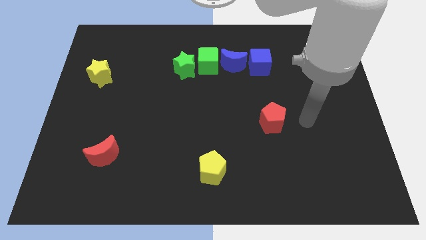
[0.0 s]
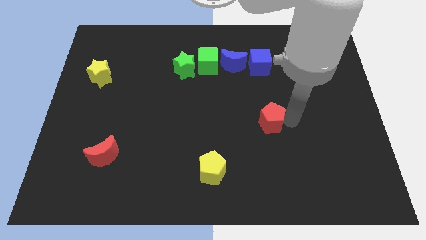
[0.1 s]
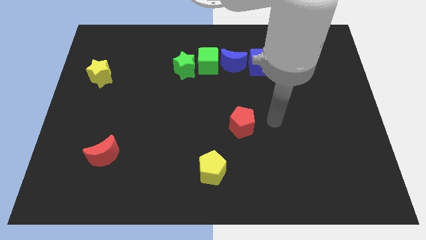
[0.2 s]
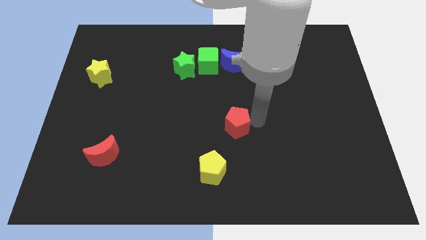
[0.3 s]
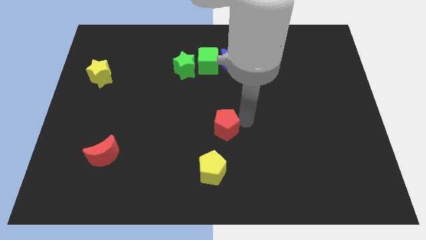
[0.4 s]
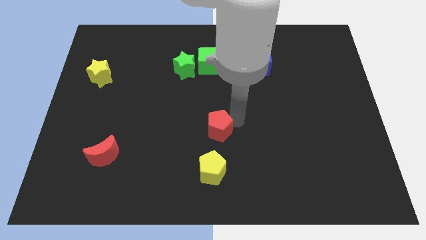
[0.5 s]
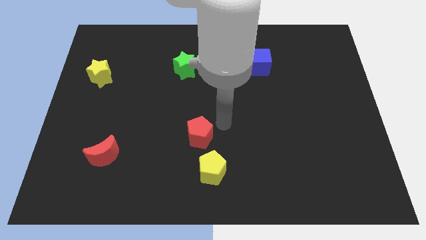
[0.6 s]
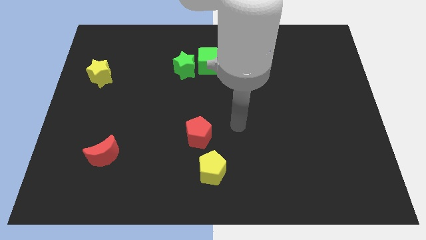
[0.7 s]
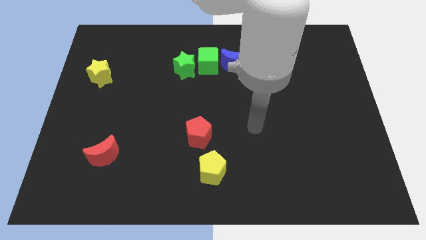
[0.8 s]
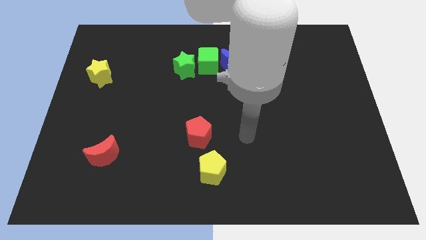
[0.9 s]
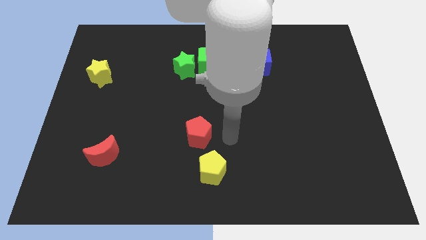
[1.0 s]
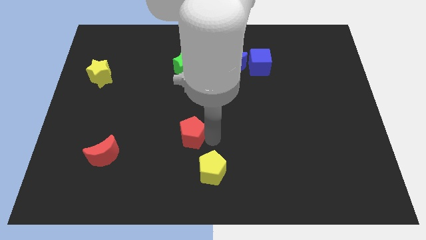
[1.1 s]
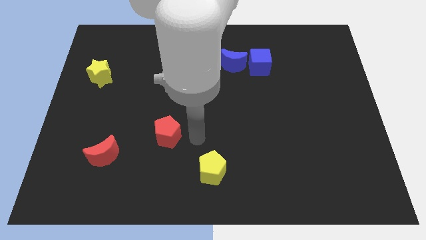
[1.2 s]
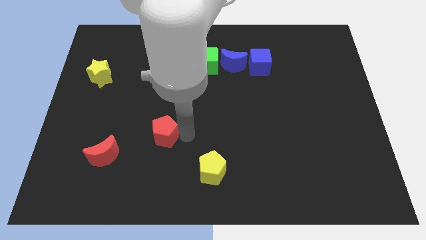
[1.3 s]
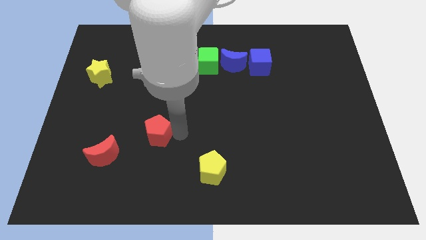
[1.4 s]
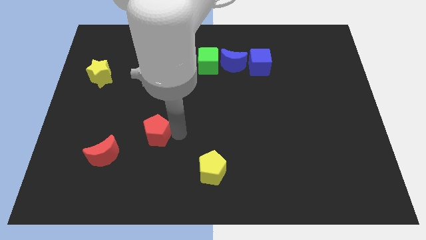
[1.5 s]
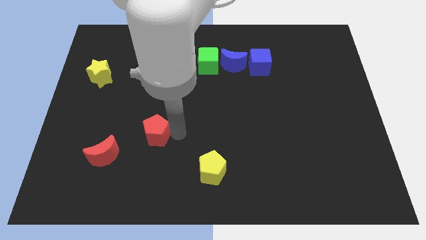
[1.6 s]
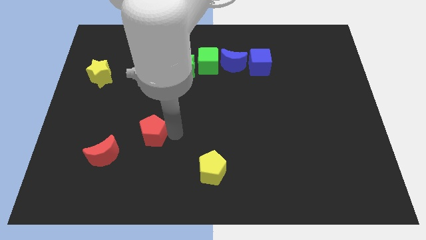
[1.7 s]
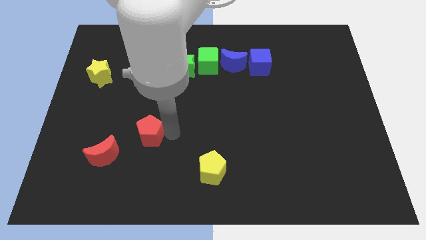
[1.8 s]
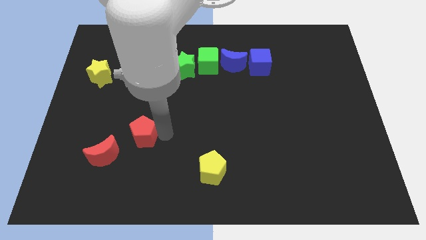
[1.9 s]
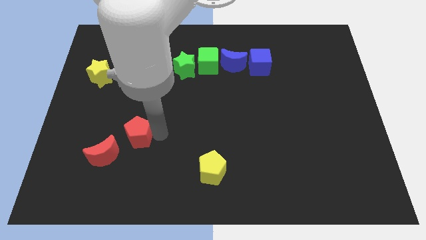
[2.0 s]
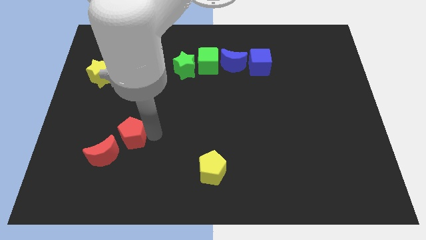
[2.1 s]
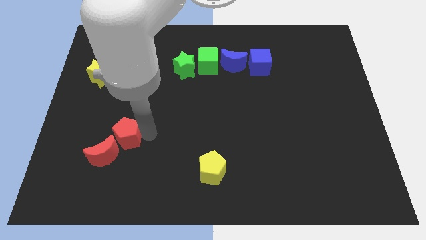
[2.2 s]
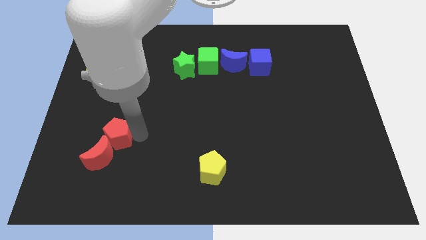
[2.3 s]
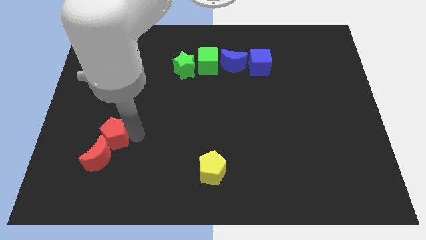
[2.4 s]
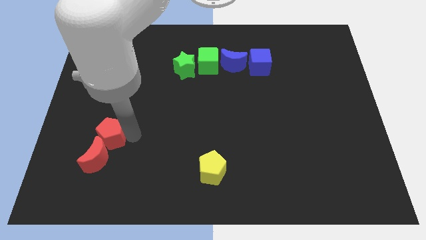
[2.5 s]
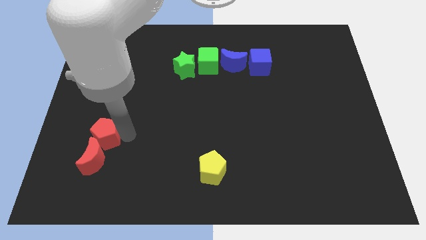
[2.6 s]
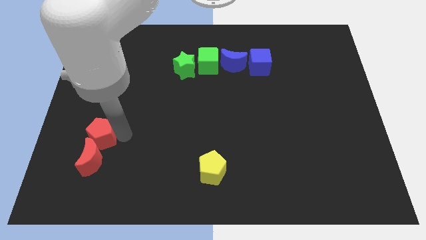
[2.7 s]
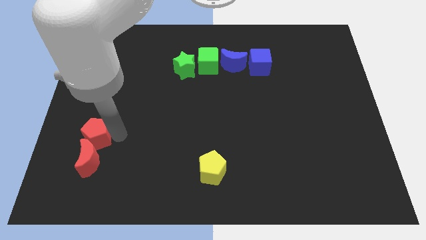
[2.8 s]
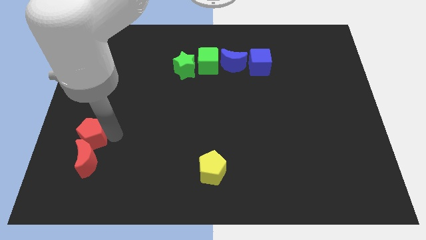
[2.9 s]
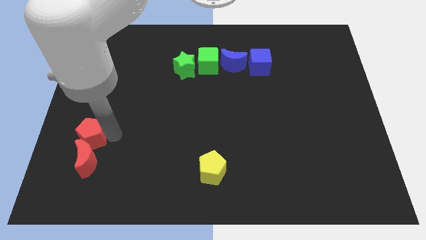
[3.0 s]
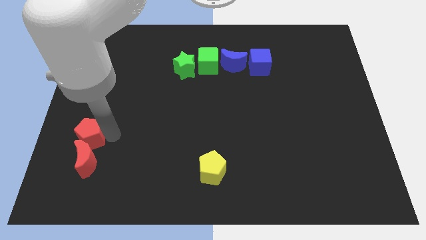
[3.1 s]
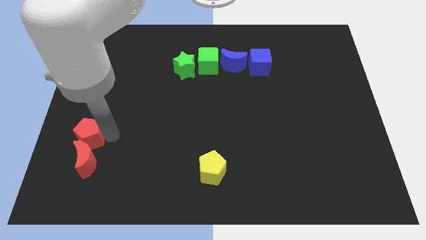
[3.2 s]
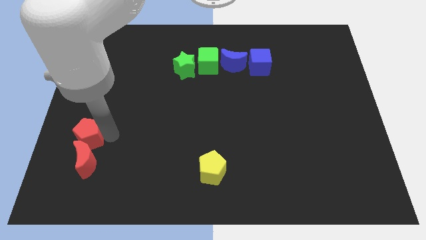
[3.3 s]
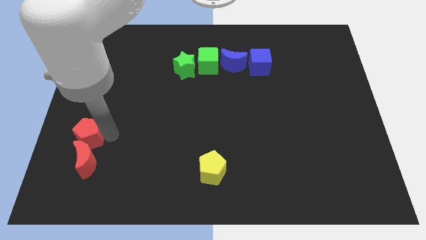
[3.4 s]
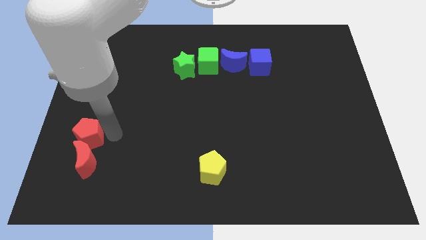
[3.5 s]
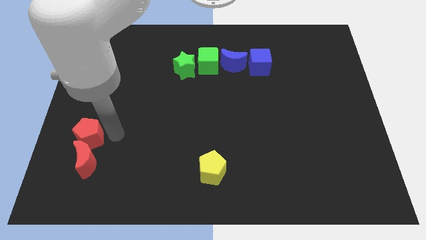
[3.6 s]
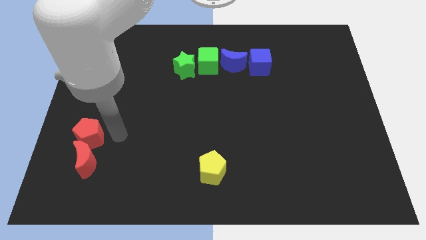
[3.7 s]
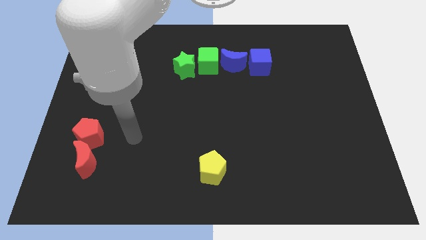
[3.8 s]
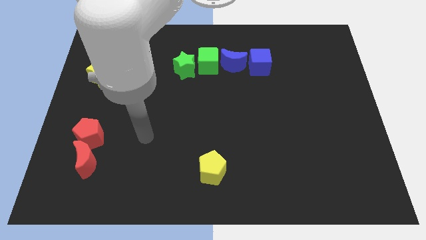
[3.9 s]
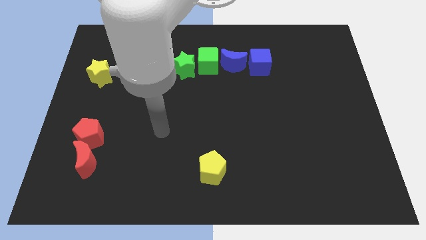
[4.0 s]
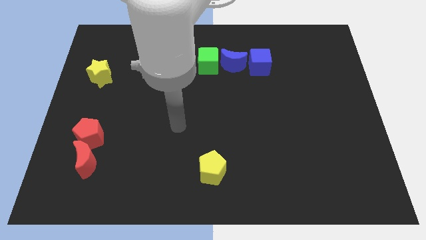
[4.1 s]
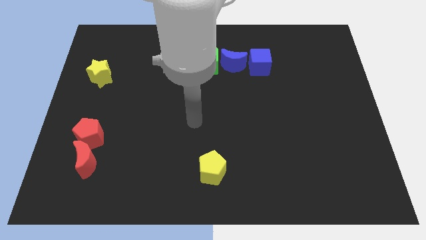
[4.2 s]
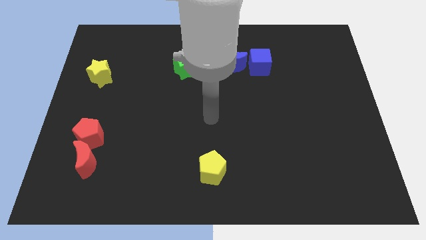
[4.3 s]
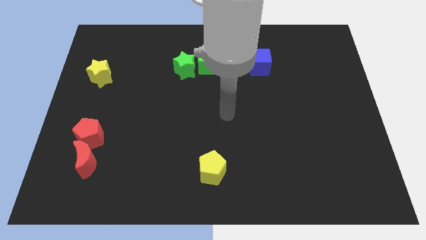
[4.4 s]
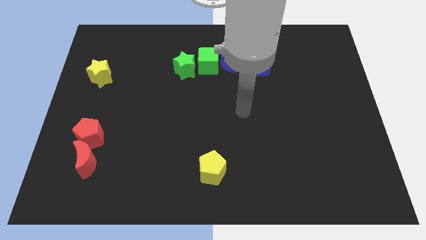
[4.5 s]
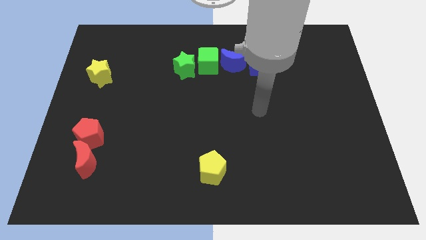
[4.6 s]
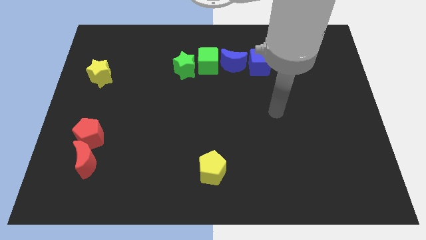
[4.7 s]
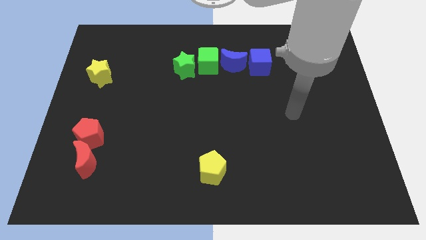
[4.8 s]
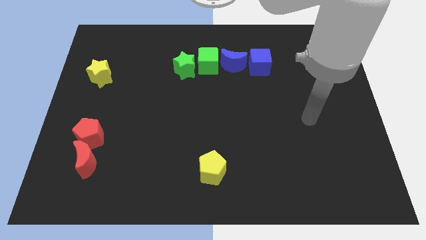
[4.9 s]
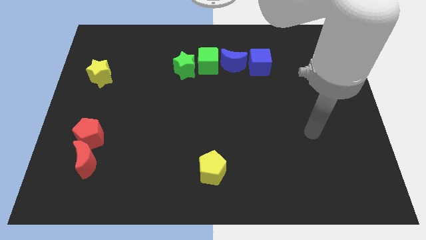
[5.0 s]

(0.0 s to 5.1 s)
place the red pentagon to the top of the red moon

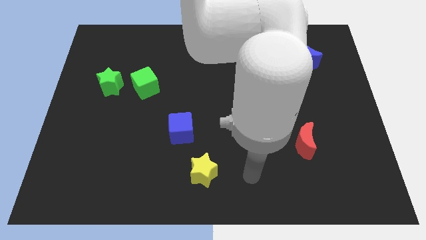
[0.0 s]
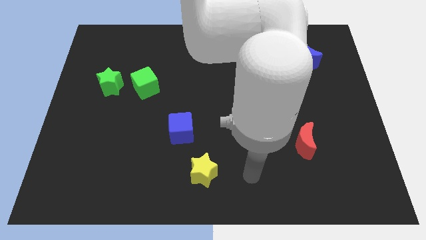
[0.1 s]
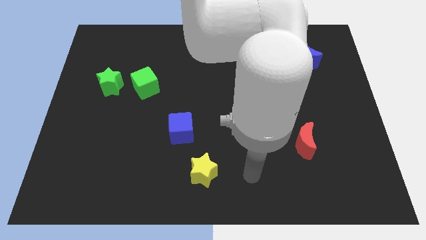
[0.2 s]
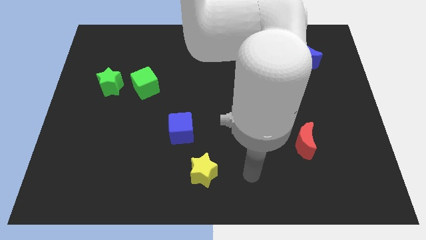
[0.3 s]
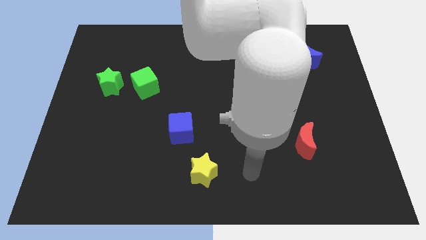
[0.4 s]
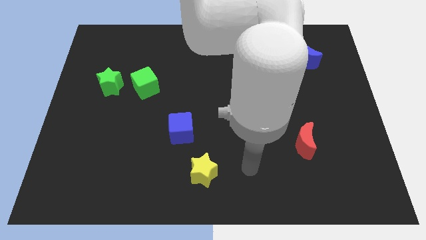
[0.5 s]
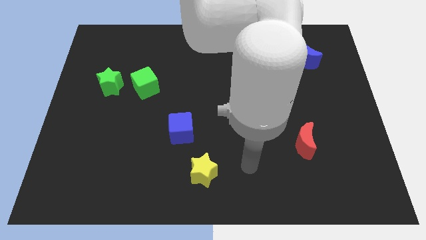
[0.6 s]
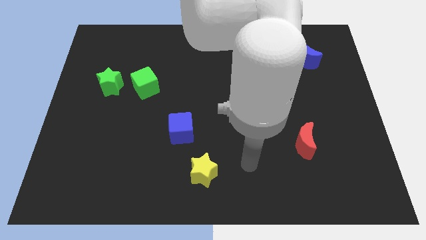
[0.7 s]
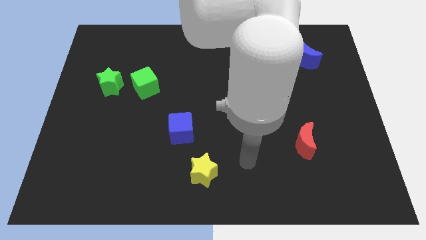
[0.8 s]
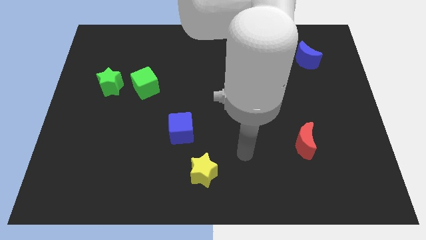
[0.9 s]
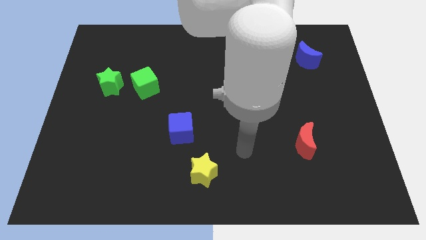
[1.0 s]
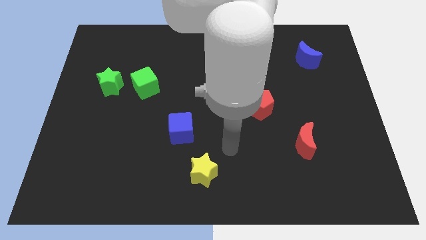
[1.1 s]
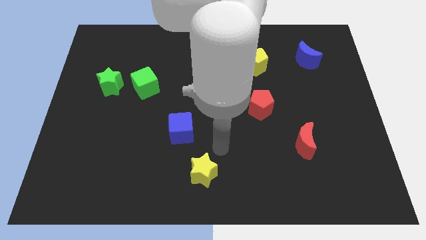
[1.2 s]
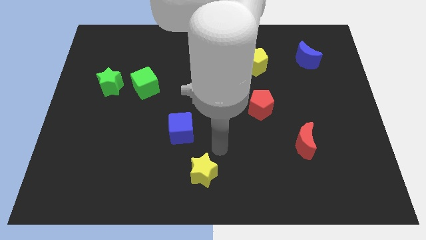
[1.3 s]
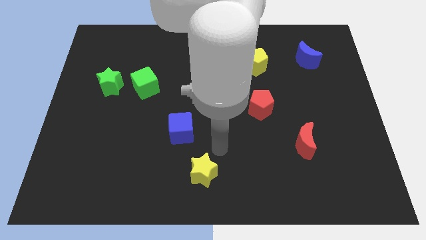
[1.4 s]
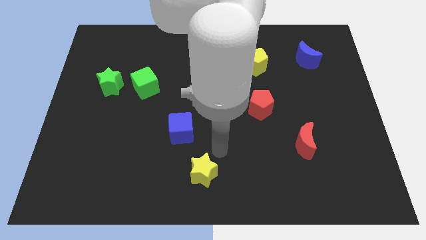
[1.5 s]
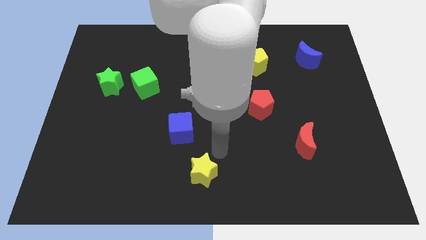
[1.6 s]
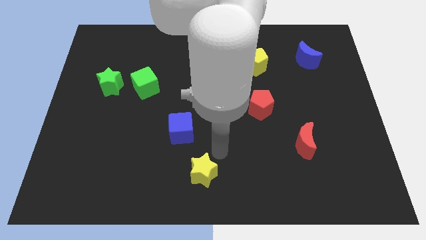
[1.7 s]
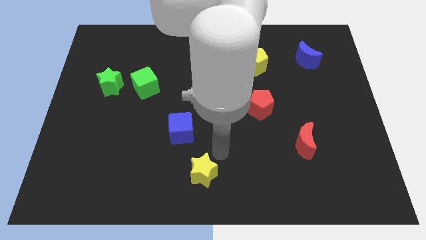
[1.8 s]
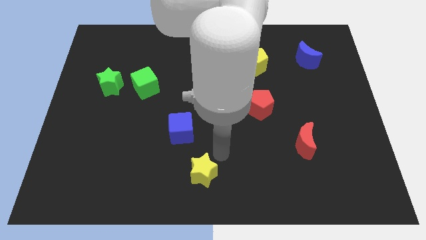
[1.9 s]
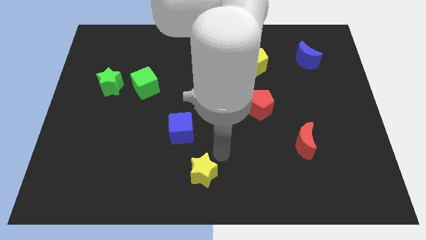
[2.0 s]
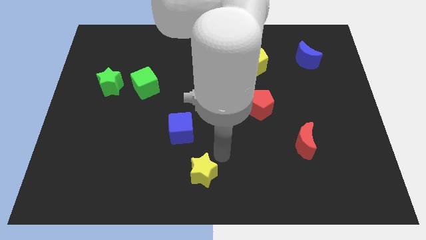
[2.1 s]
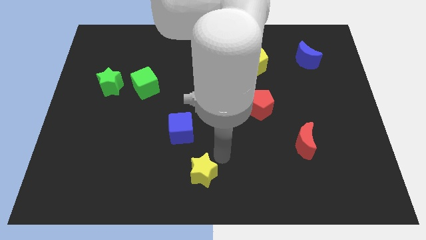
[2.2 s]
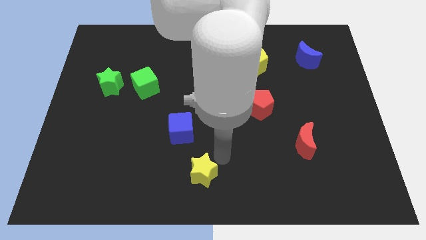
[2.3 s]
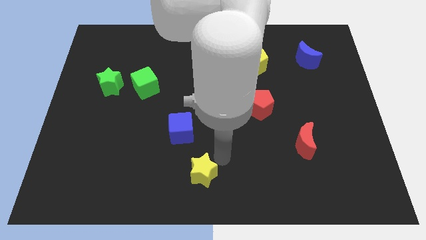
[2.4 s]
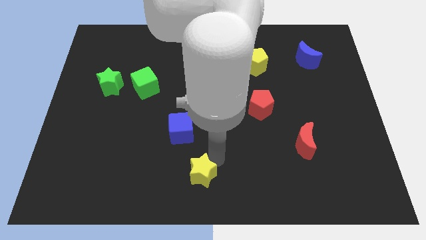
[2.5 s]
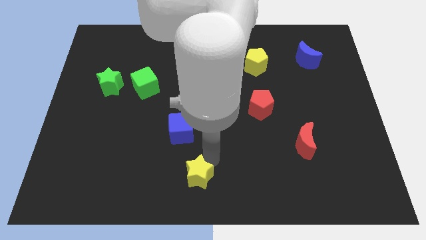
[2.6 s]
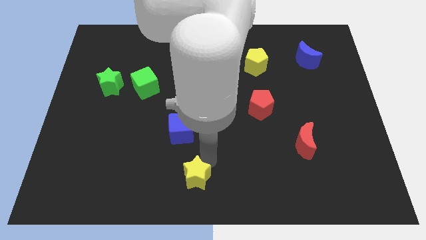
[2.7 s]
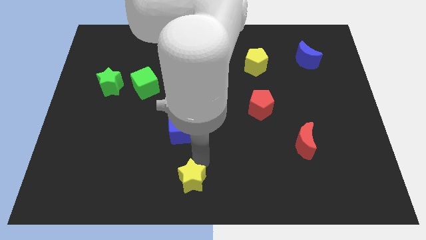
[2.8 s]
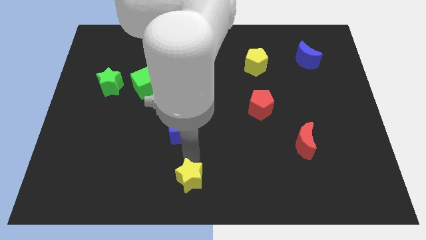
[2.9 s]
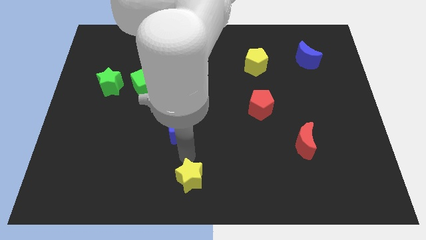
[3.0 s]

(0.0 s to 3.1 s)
push the yellow star slightly to the left

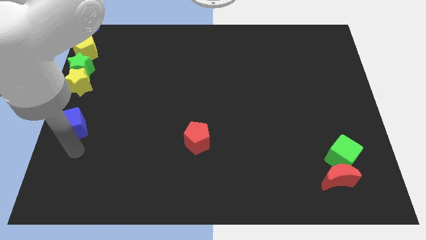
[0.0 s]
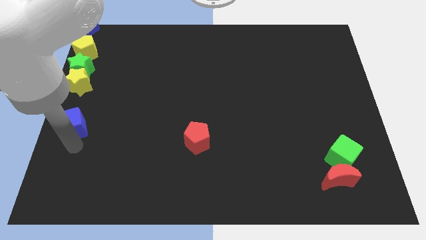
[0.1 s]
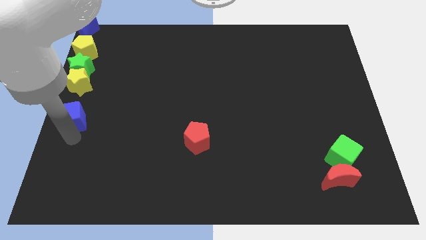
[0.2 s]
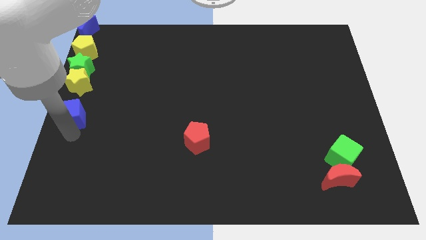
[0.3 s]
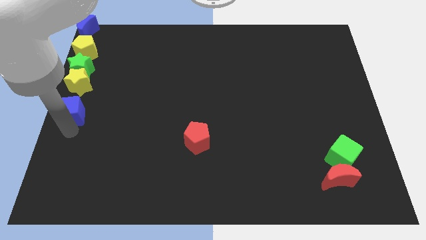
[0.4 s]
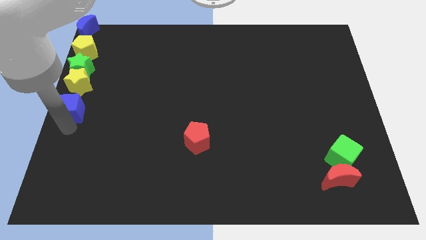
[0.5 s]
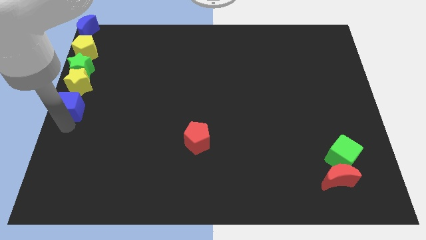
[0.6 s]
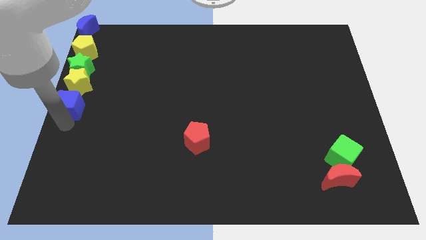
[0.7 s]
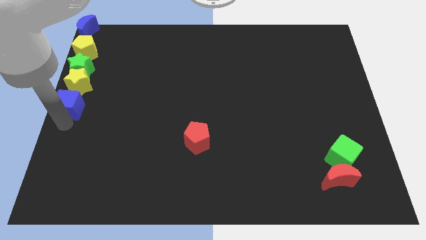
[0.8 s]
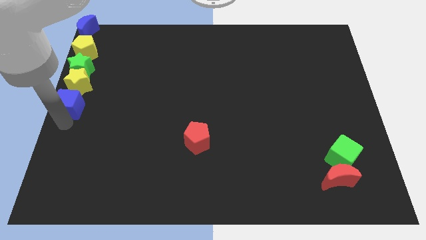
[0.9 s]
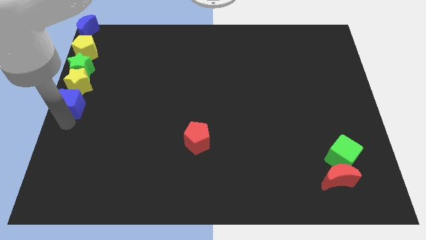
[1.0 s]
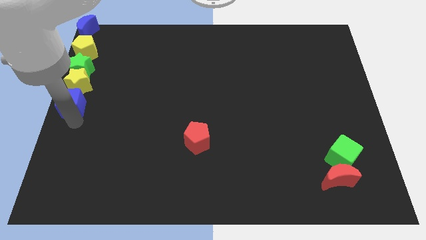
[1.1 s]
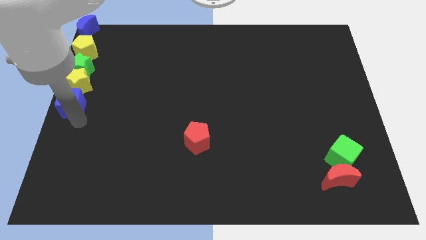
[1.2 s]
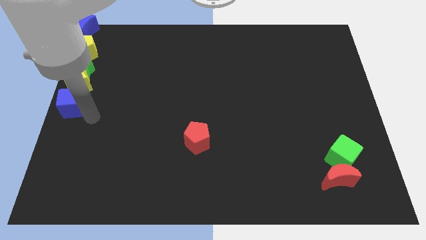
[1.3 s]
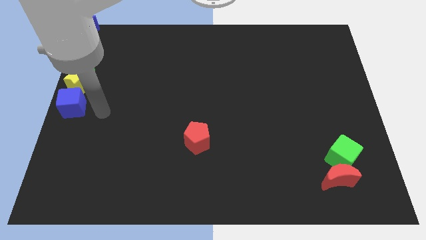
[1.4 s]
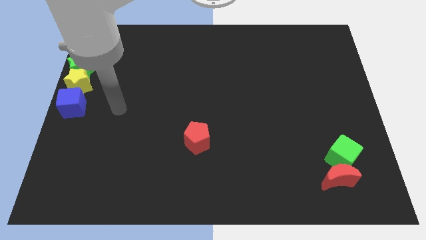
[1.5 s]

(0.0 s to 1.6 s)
place the blue cube below the yellow star
